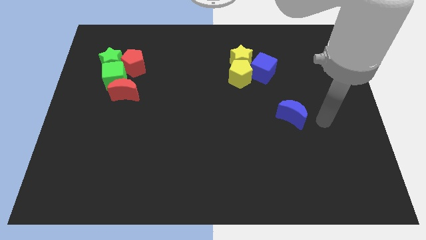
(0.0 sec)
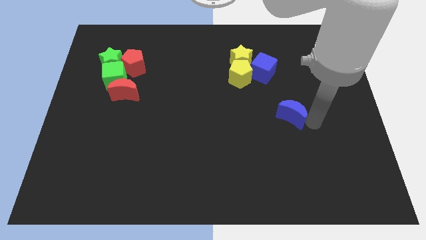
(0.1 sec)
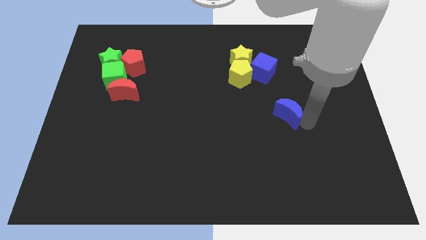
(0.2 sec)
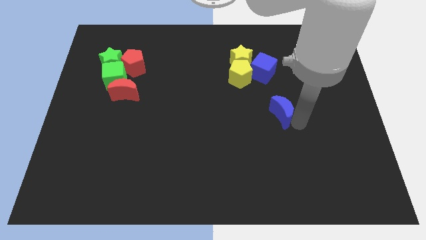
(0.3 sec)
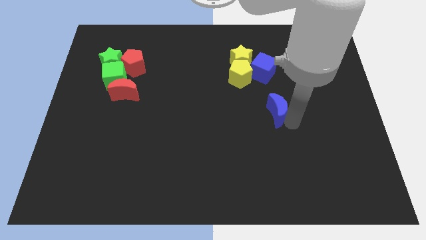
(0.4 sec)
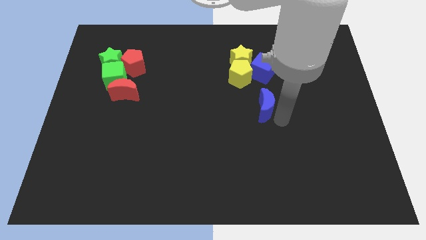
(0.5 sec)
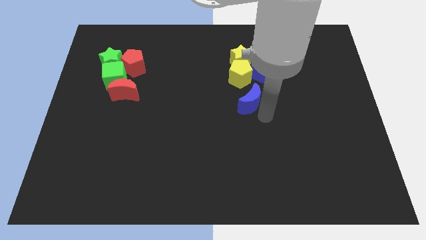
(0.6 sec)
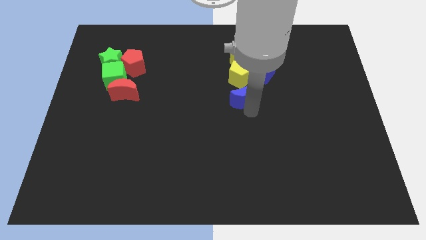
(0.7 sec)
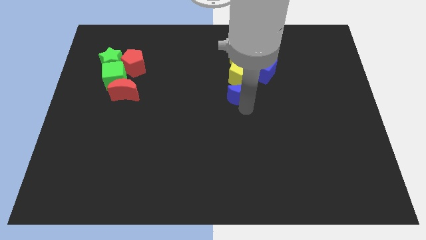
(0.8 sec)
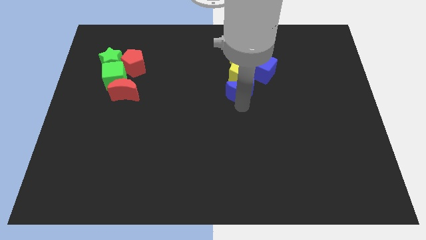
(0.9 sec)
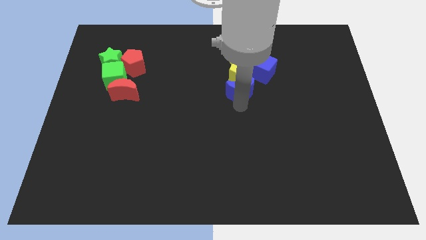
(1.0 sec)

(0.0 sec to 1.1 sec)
add blue crescent below the yellow pentagon

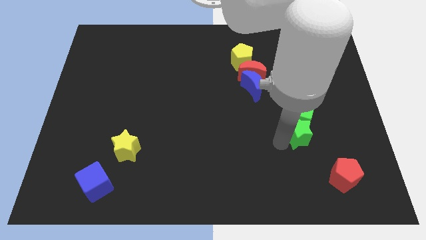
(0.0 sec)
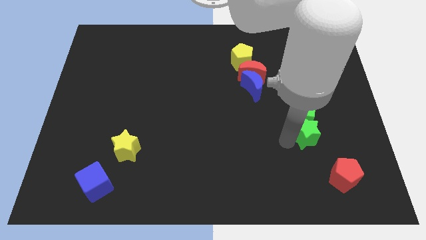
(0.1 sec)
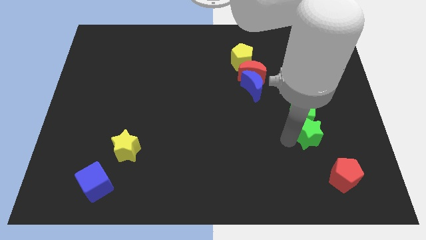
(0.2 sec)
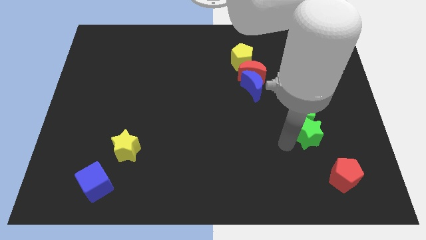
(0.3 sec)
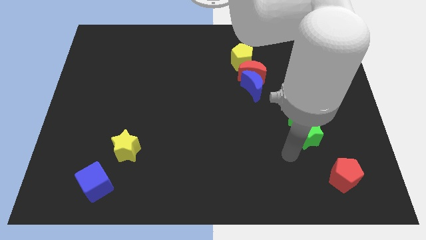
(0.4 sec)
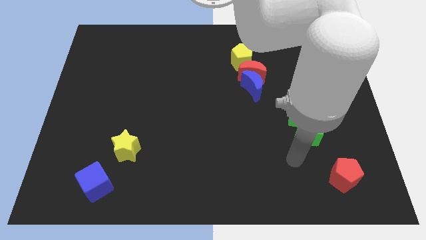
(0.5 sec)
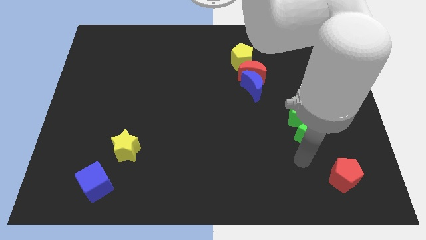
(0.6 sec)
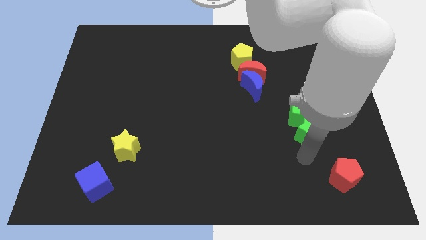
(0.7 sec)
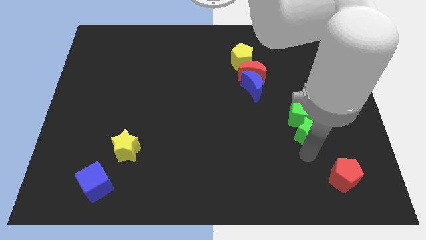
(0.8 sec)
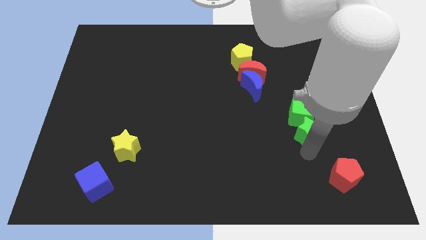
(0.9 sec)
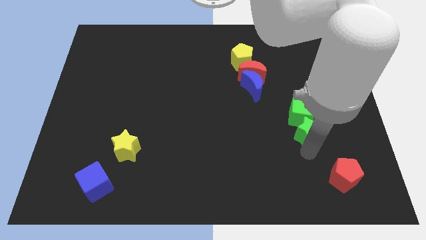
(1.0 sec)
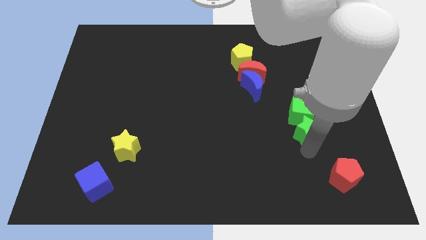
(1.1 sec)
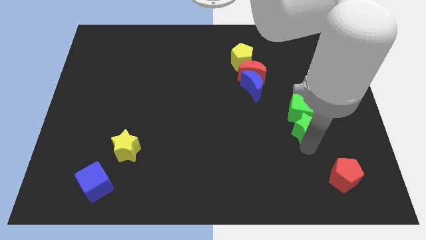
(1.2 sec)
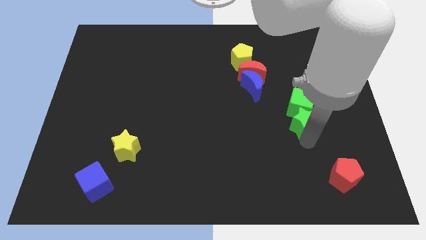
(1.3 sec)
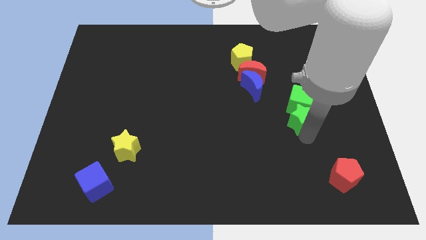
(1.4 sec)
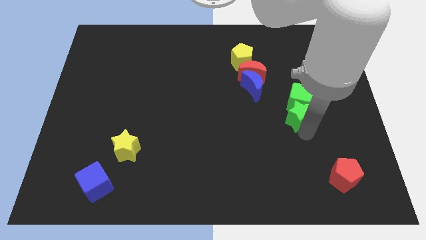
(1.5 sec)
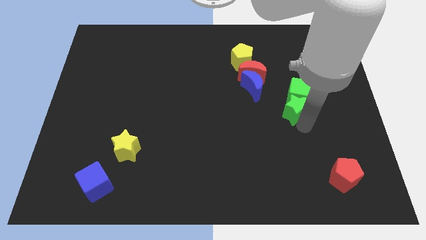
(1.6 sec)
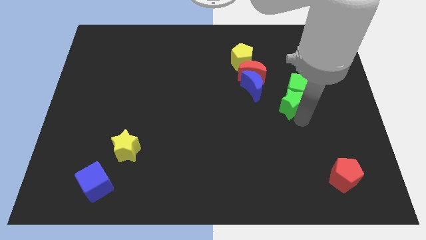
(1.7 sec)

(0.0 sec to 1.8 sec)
push the green star into the green cube

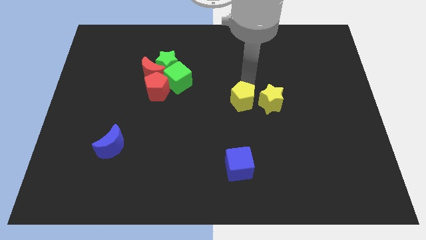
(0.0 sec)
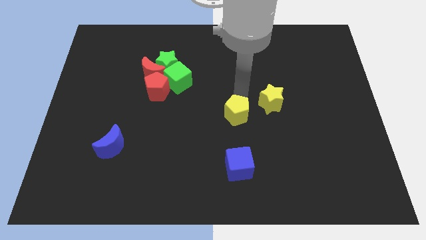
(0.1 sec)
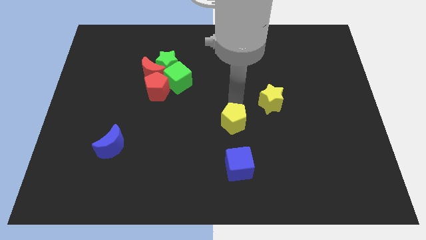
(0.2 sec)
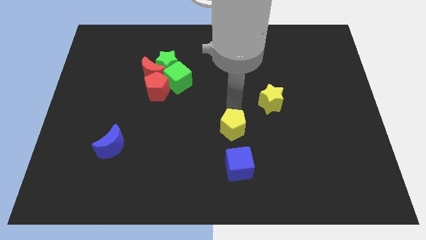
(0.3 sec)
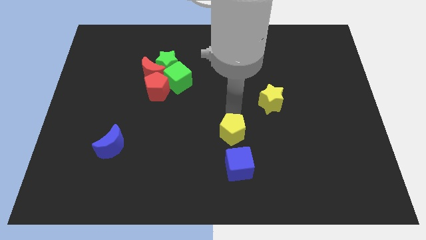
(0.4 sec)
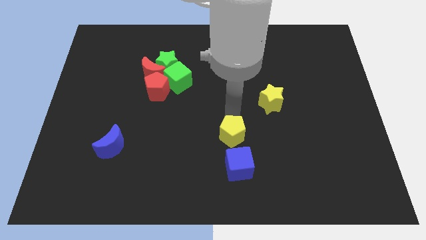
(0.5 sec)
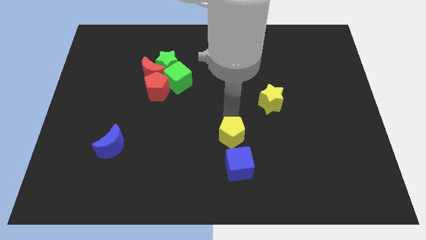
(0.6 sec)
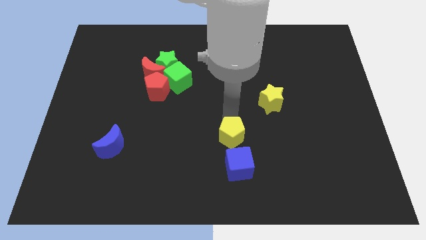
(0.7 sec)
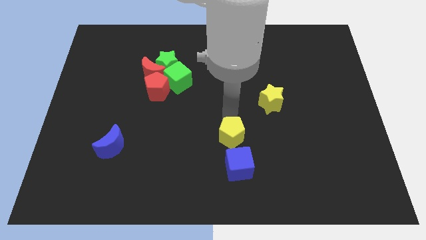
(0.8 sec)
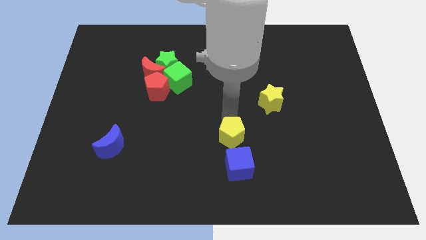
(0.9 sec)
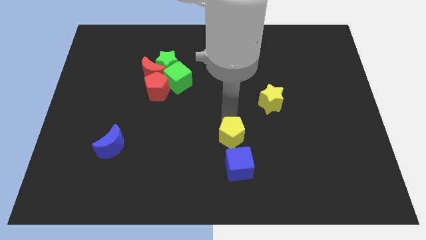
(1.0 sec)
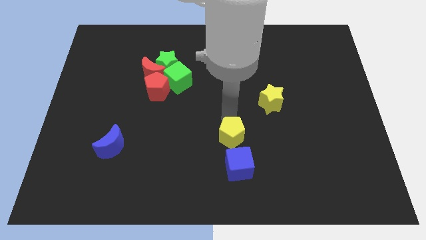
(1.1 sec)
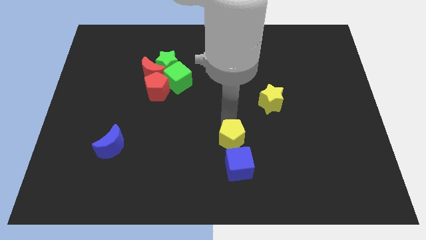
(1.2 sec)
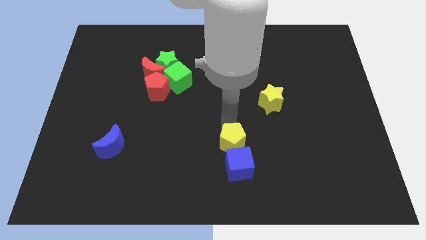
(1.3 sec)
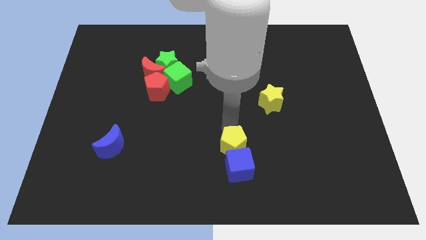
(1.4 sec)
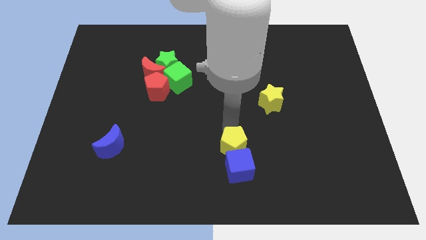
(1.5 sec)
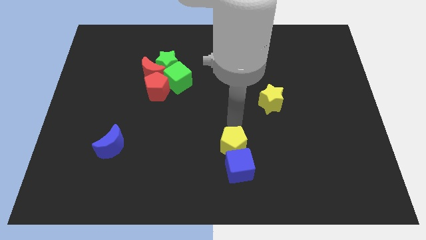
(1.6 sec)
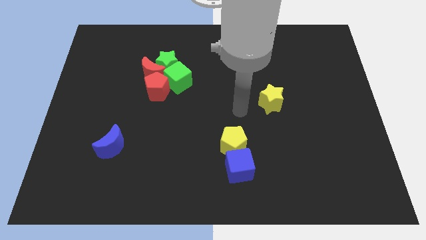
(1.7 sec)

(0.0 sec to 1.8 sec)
push the yellow pentagon to the top side of the blue cube

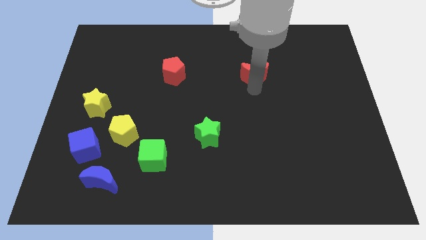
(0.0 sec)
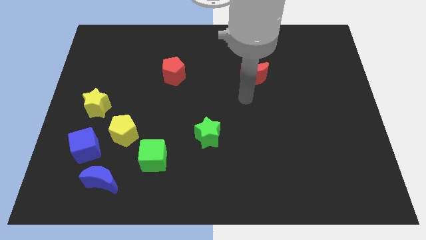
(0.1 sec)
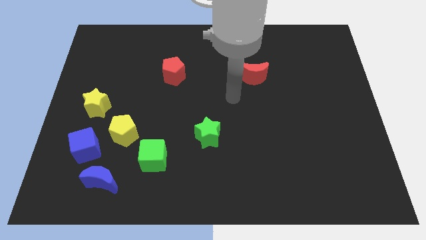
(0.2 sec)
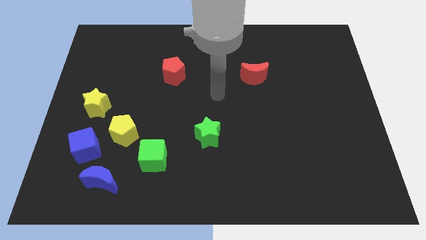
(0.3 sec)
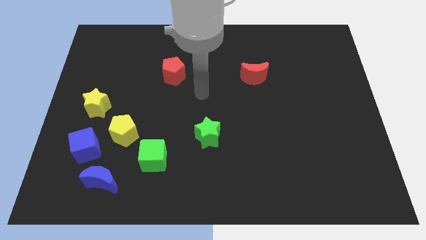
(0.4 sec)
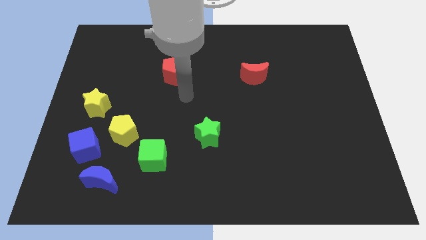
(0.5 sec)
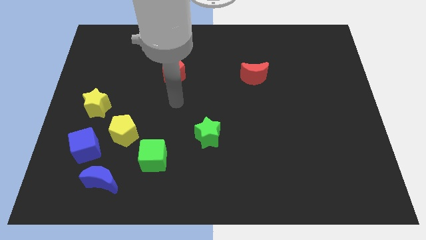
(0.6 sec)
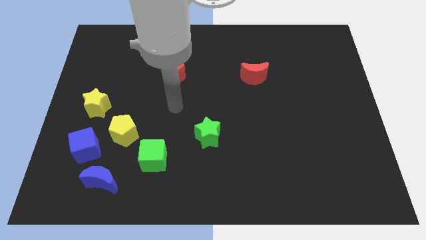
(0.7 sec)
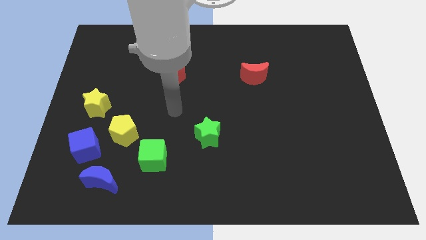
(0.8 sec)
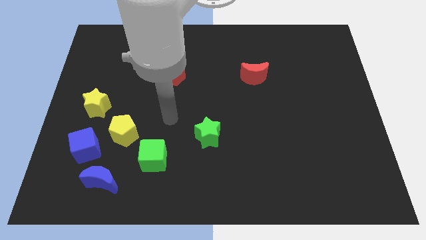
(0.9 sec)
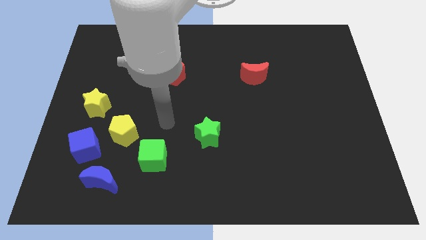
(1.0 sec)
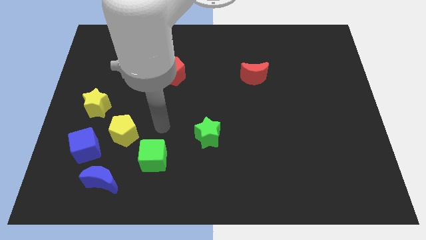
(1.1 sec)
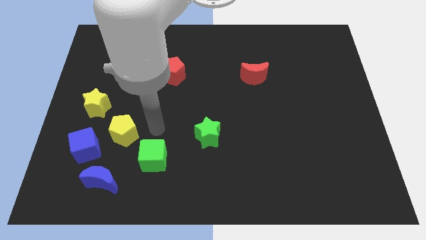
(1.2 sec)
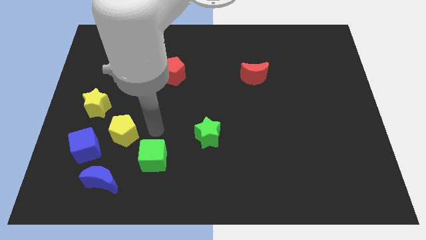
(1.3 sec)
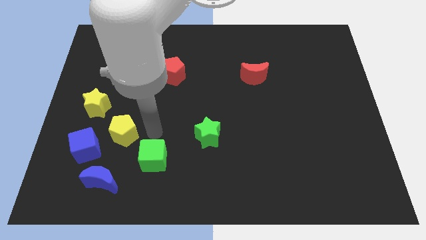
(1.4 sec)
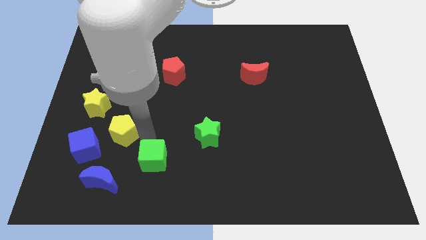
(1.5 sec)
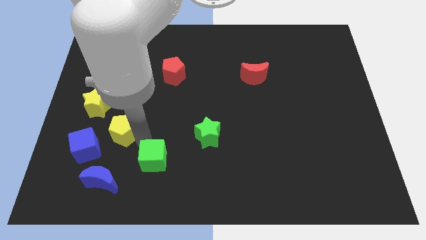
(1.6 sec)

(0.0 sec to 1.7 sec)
move your arm away from the red moon

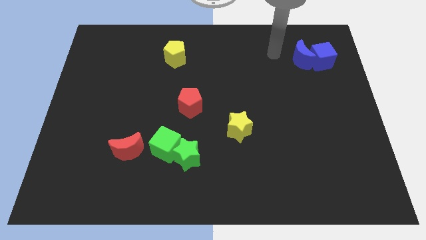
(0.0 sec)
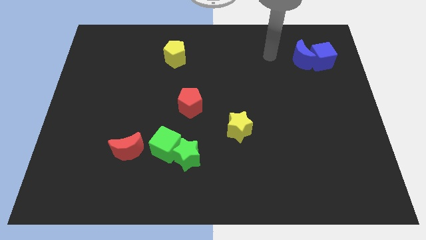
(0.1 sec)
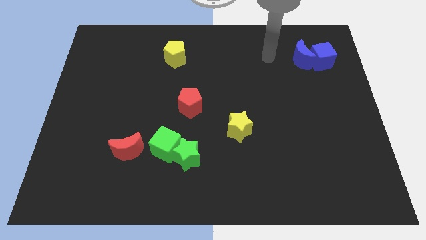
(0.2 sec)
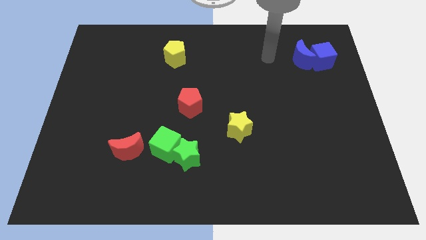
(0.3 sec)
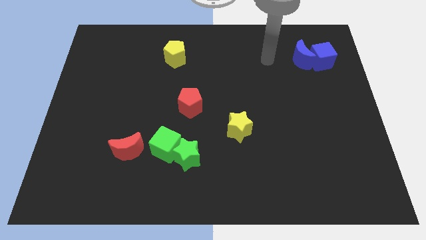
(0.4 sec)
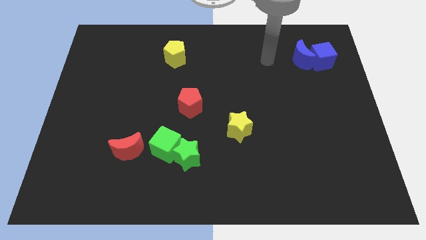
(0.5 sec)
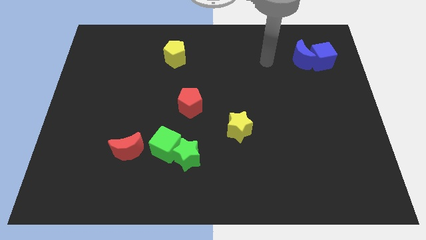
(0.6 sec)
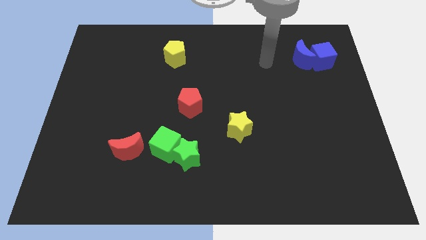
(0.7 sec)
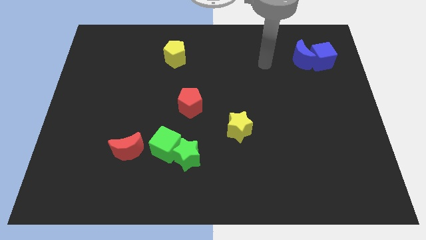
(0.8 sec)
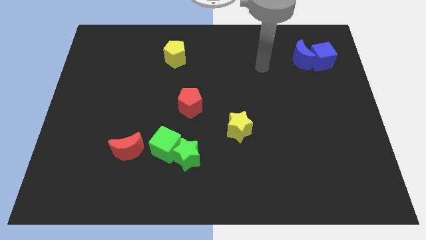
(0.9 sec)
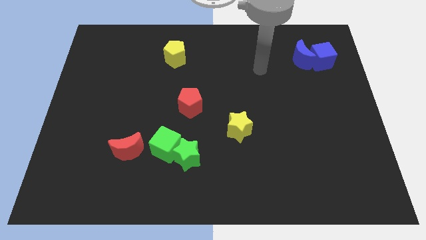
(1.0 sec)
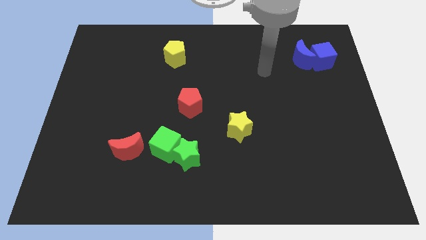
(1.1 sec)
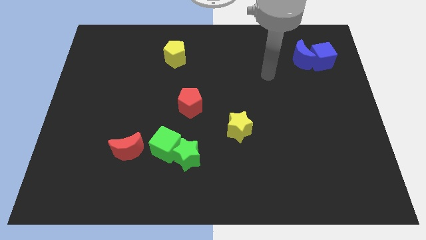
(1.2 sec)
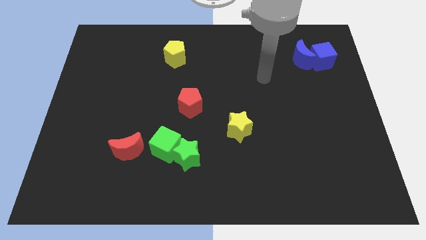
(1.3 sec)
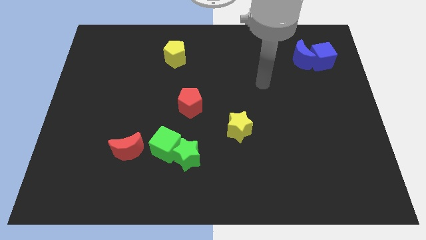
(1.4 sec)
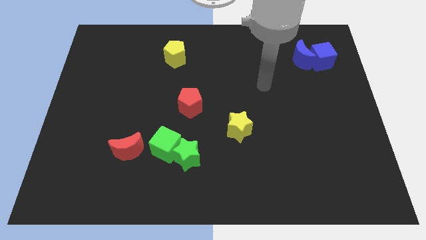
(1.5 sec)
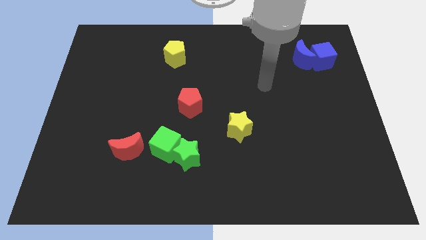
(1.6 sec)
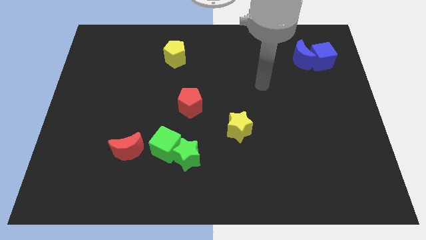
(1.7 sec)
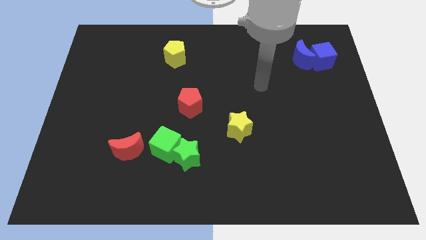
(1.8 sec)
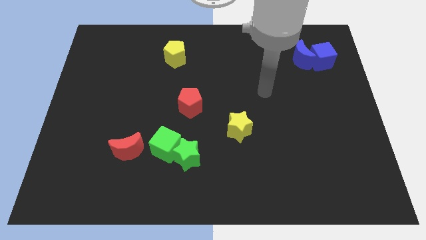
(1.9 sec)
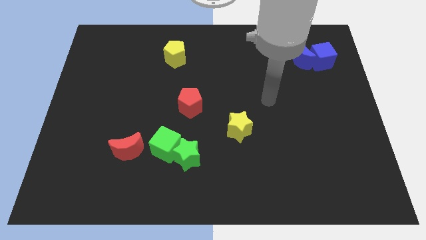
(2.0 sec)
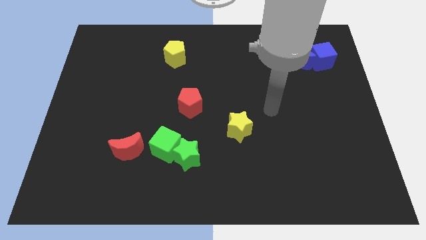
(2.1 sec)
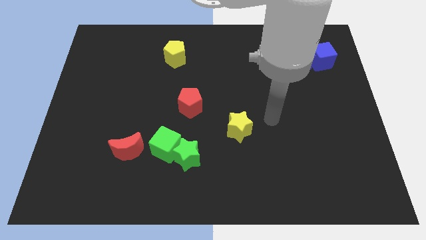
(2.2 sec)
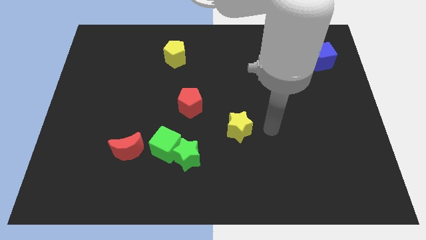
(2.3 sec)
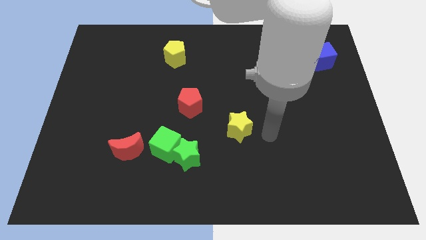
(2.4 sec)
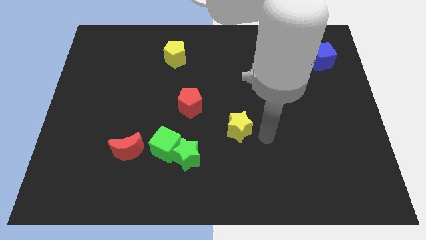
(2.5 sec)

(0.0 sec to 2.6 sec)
move arm to the right of yellow star

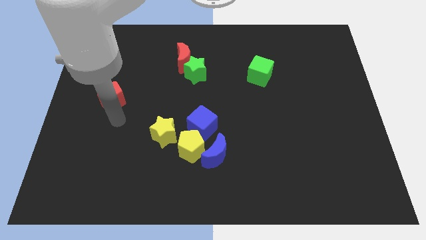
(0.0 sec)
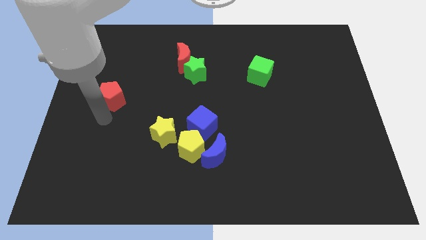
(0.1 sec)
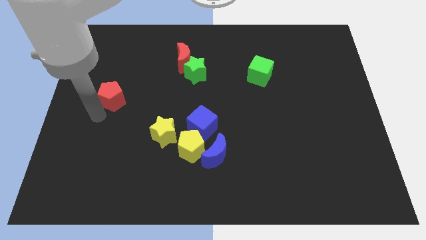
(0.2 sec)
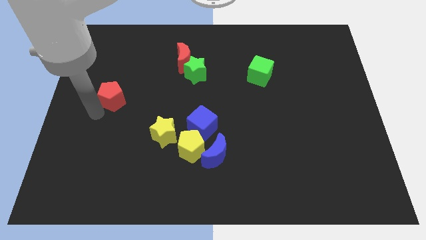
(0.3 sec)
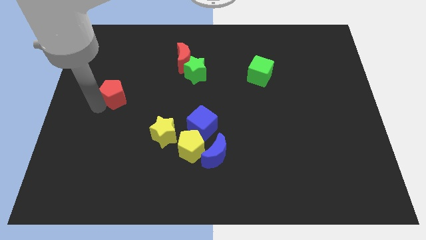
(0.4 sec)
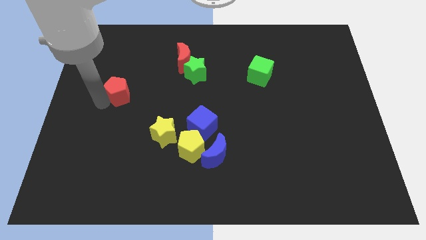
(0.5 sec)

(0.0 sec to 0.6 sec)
slightly move the red pentagon towards top
